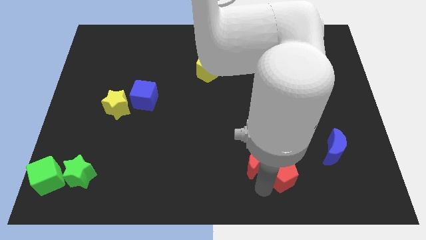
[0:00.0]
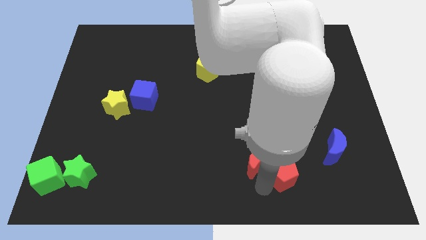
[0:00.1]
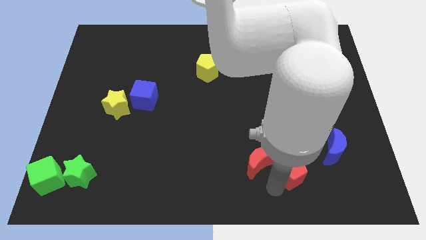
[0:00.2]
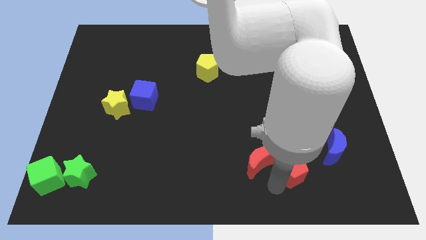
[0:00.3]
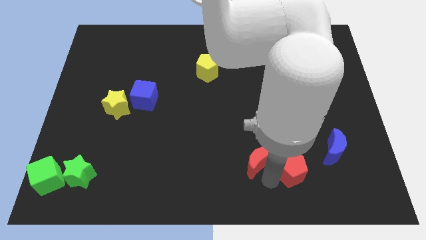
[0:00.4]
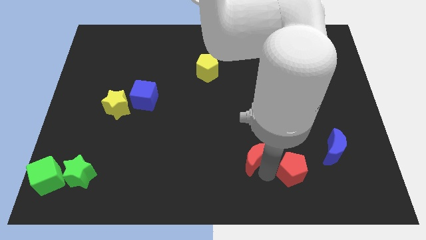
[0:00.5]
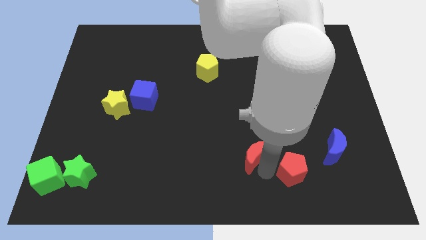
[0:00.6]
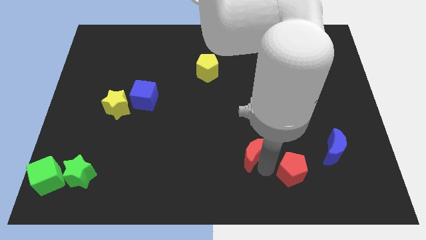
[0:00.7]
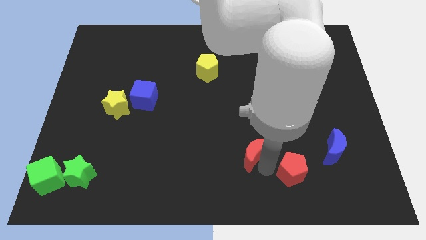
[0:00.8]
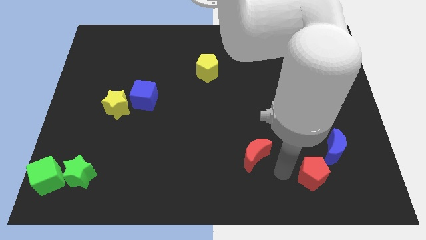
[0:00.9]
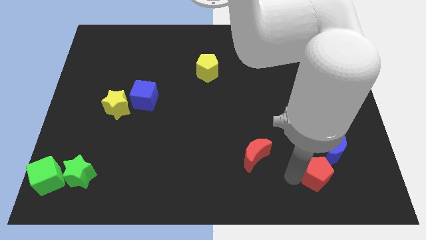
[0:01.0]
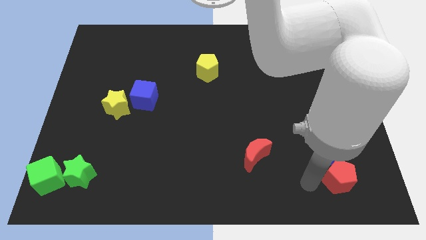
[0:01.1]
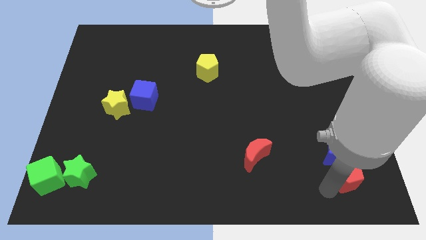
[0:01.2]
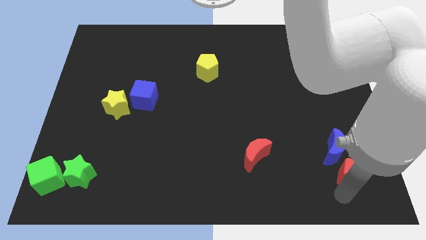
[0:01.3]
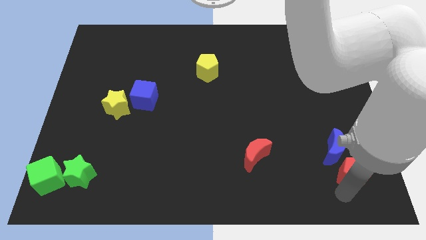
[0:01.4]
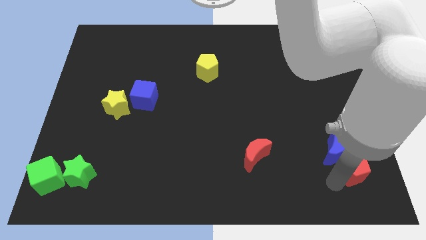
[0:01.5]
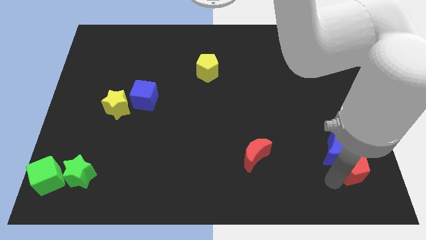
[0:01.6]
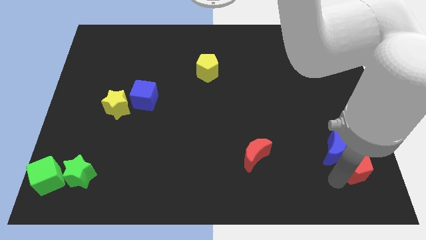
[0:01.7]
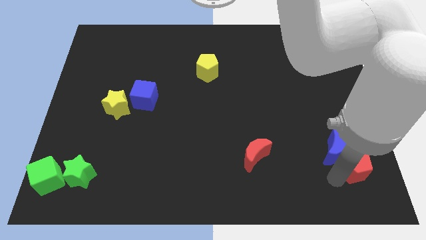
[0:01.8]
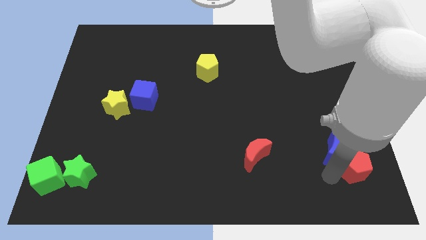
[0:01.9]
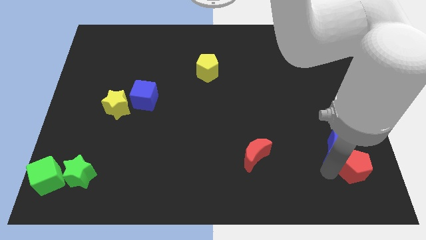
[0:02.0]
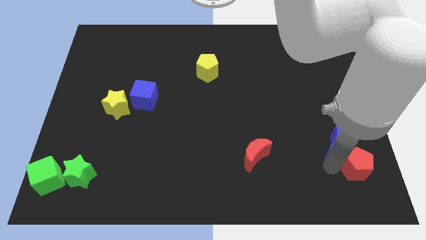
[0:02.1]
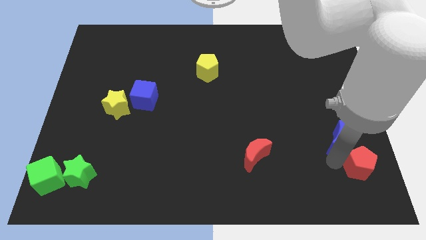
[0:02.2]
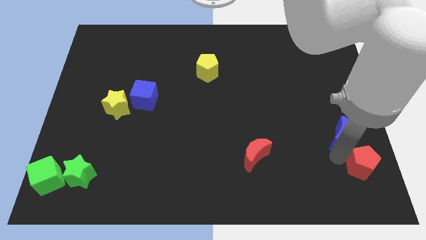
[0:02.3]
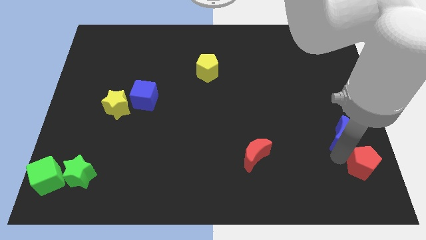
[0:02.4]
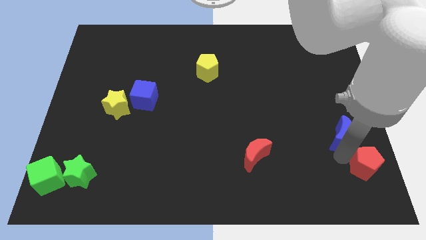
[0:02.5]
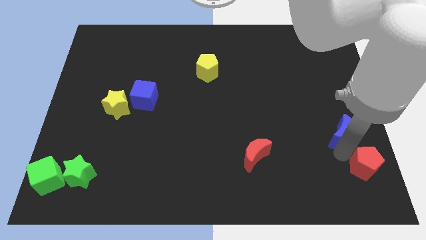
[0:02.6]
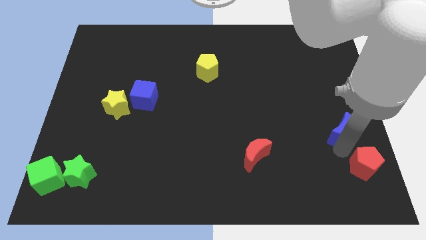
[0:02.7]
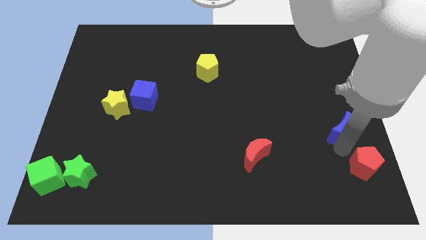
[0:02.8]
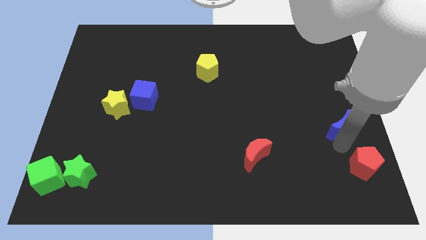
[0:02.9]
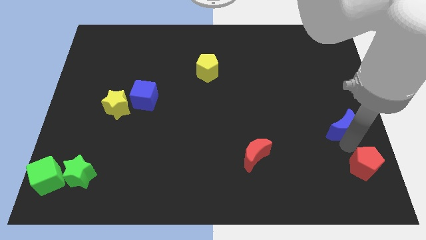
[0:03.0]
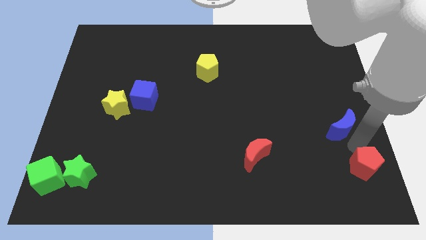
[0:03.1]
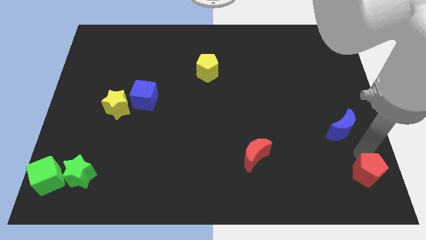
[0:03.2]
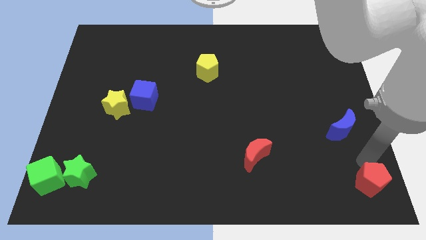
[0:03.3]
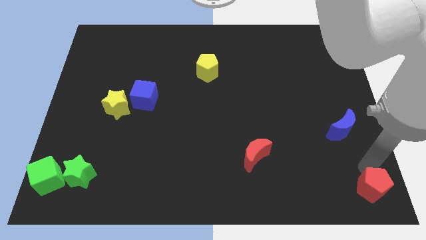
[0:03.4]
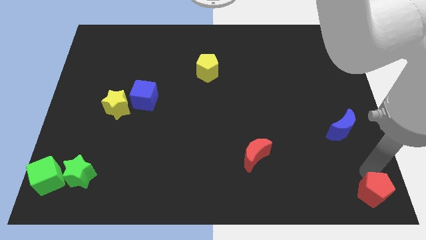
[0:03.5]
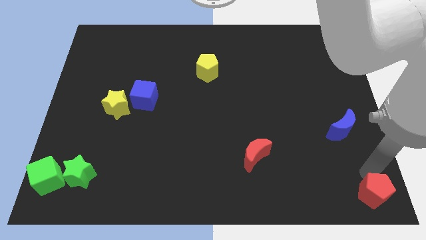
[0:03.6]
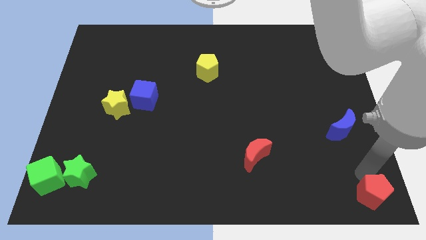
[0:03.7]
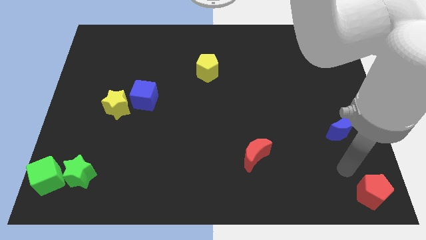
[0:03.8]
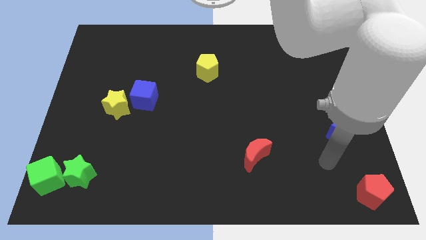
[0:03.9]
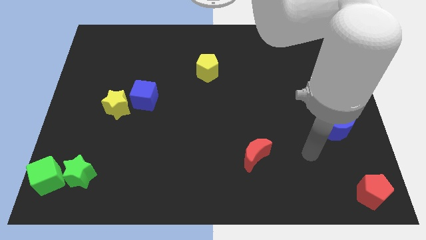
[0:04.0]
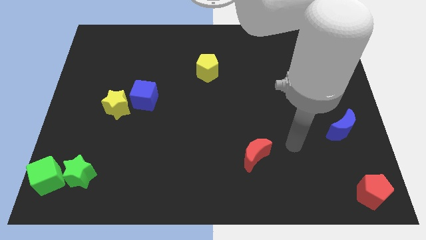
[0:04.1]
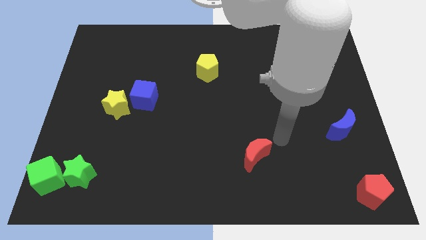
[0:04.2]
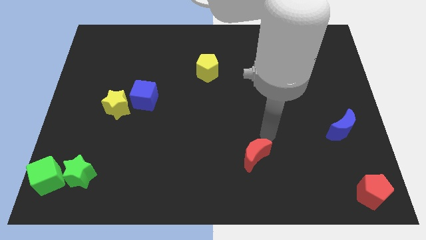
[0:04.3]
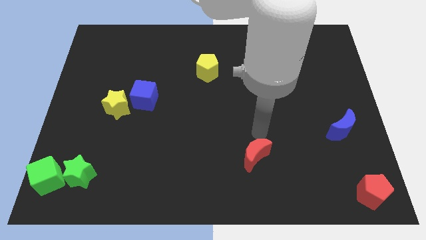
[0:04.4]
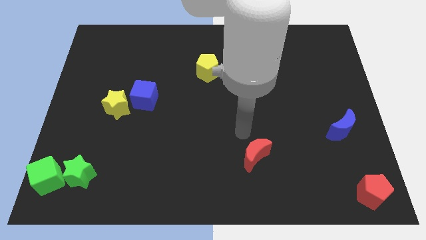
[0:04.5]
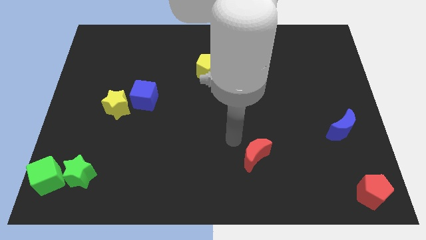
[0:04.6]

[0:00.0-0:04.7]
drag the red pentagon towards bottom right

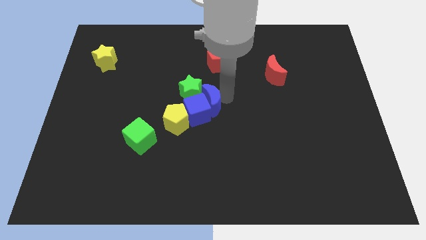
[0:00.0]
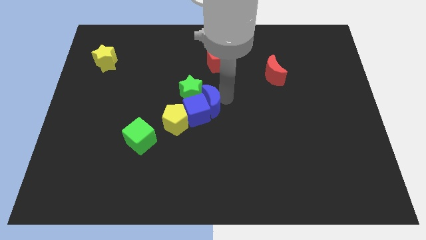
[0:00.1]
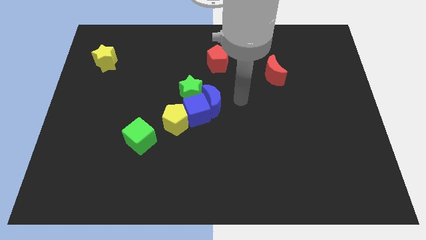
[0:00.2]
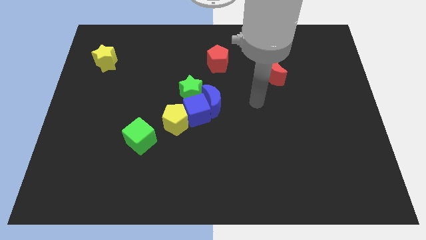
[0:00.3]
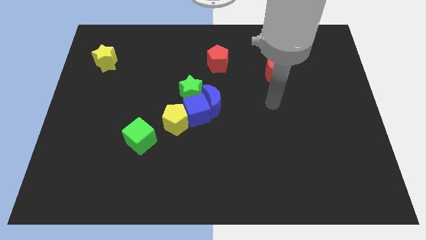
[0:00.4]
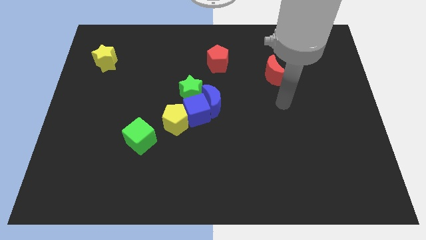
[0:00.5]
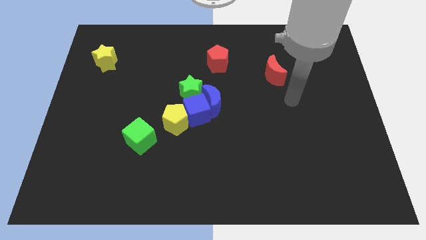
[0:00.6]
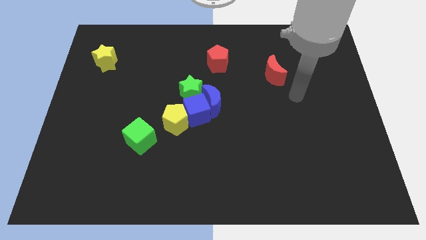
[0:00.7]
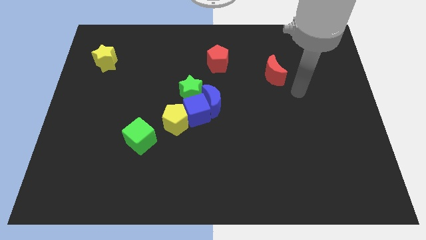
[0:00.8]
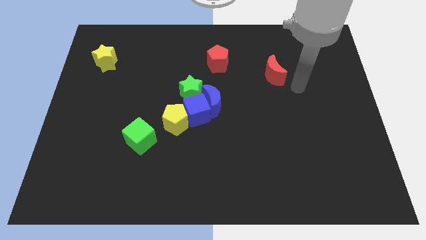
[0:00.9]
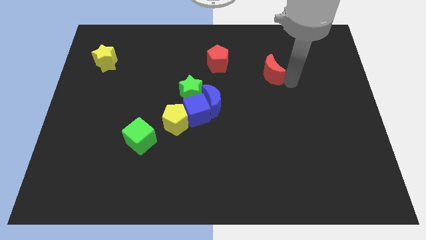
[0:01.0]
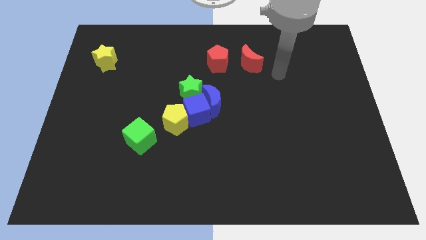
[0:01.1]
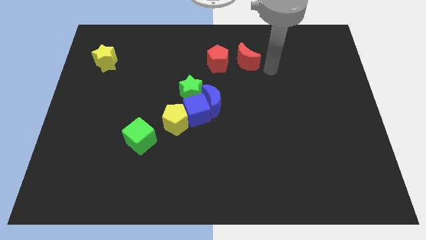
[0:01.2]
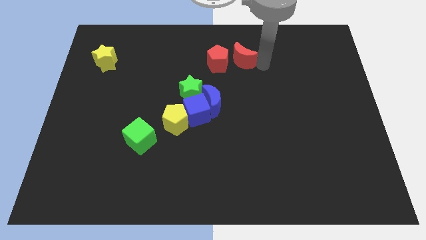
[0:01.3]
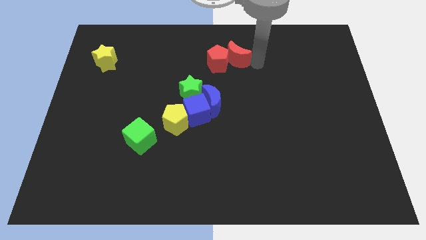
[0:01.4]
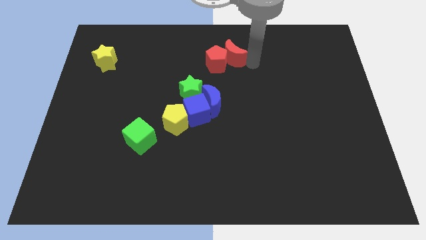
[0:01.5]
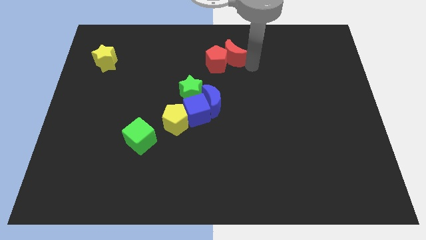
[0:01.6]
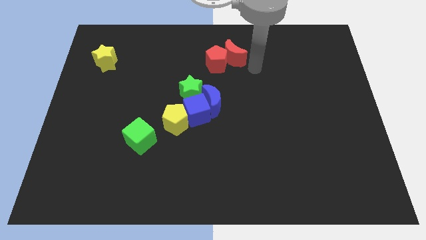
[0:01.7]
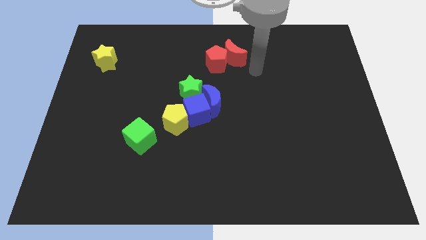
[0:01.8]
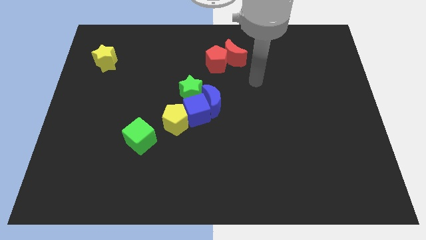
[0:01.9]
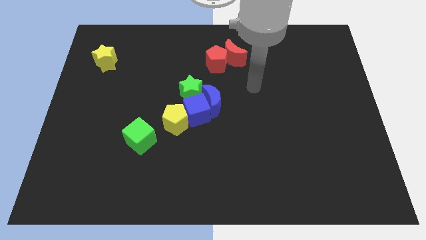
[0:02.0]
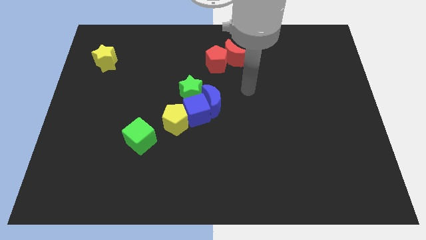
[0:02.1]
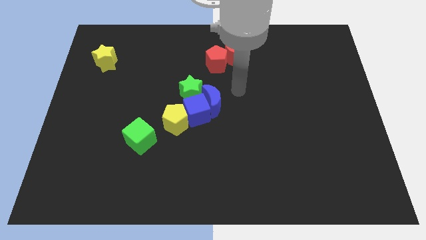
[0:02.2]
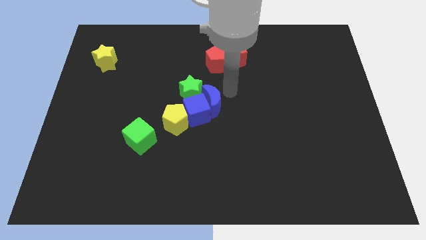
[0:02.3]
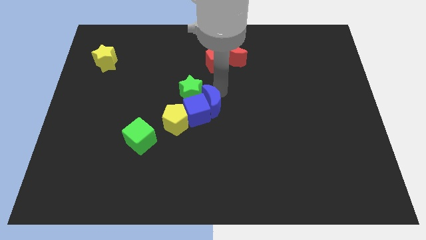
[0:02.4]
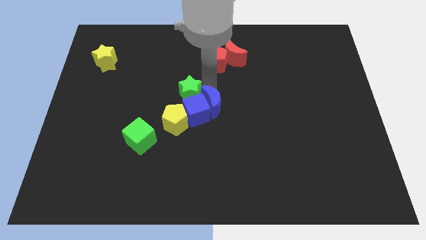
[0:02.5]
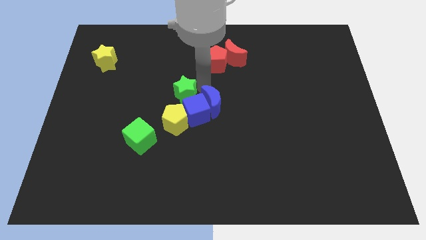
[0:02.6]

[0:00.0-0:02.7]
push the red moon into red pentagon diagonal right

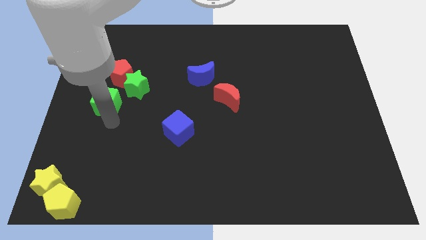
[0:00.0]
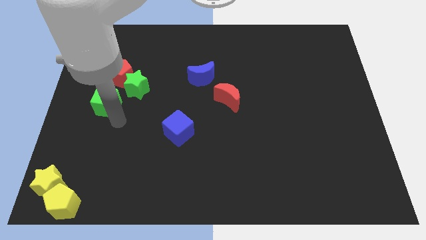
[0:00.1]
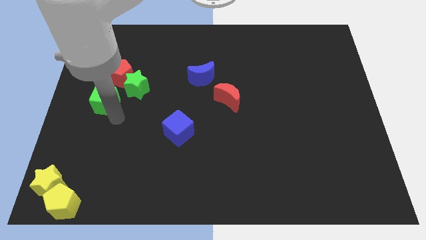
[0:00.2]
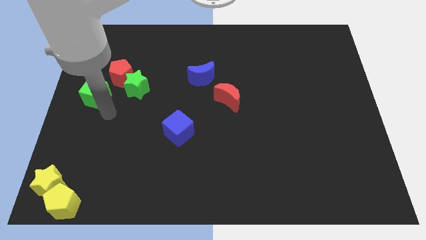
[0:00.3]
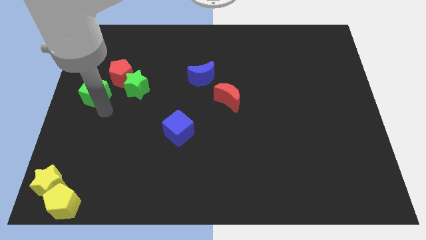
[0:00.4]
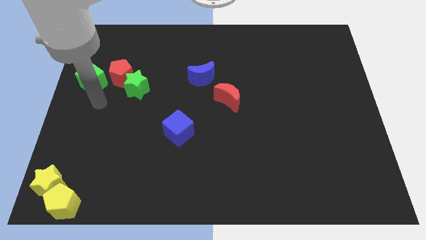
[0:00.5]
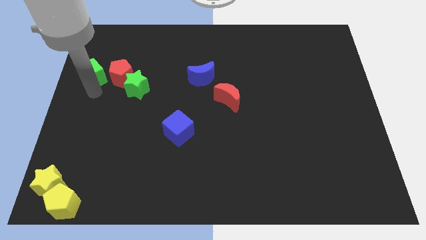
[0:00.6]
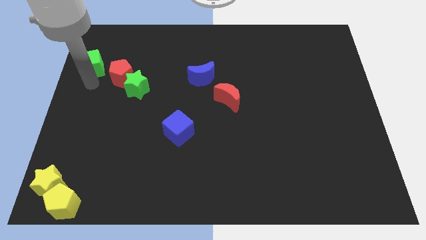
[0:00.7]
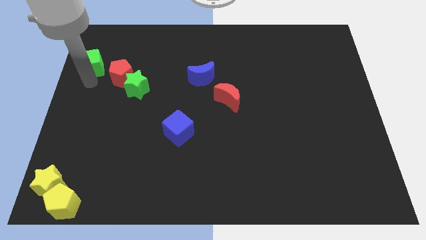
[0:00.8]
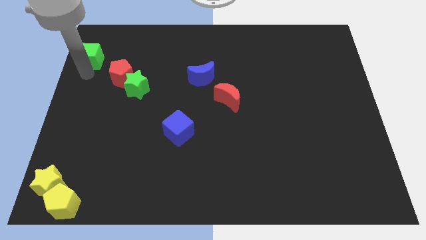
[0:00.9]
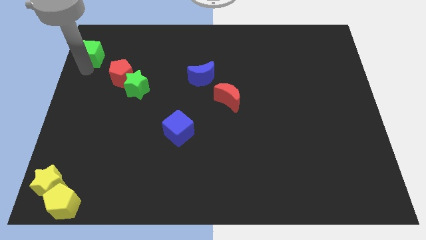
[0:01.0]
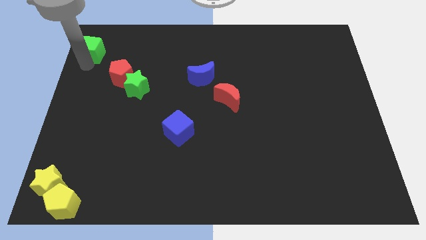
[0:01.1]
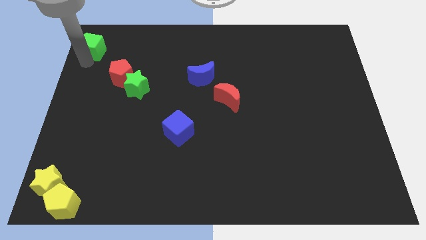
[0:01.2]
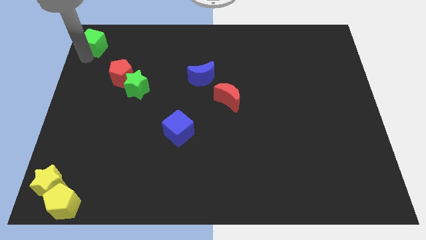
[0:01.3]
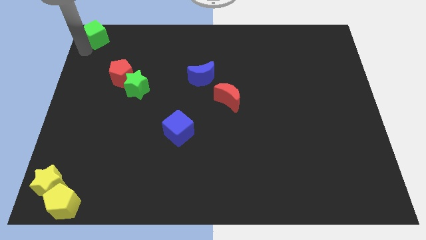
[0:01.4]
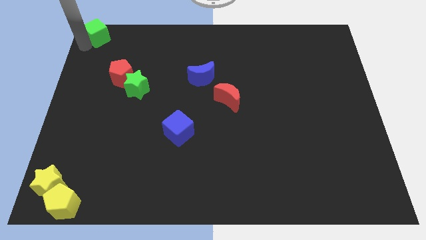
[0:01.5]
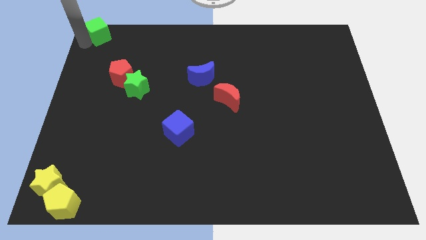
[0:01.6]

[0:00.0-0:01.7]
move the green cube diagonally top left to the red pentagon

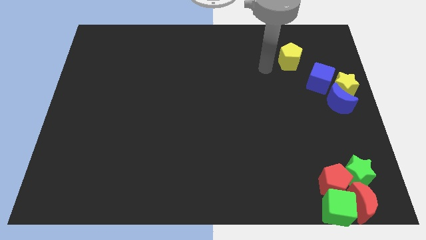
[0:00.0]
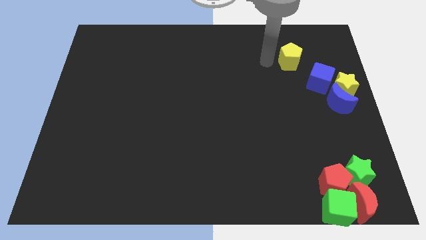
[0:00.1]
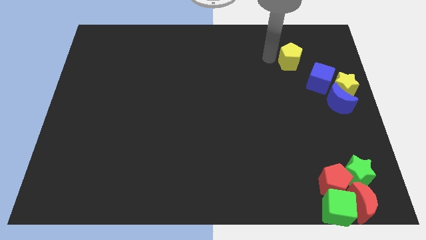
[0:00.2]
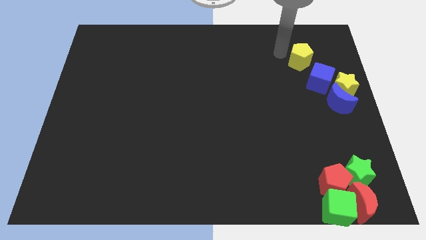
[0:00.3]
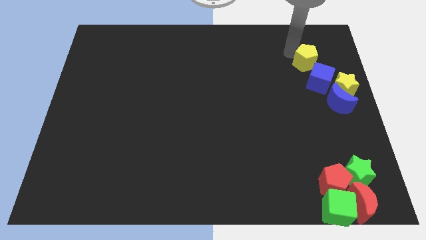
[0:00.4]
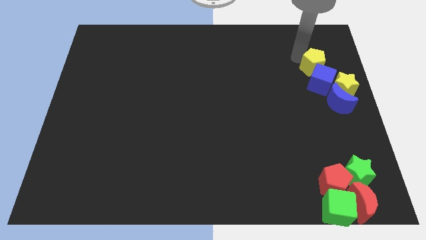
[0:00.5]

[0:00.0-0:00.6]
push the yellow pentagon into the blue cube
